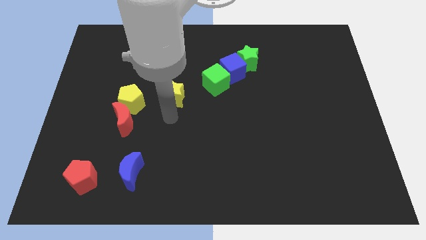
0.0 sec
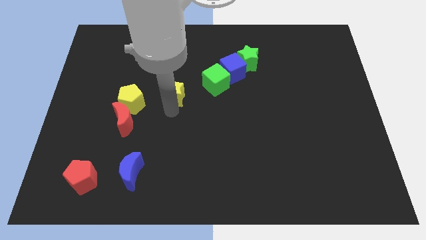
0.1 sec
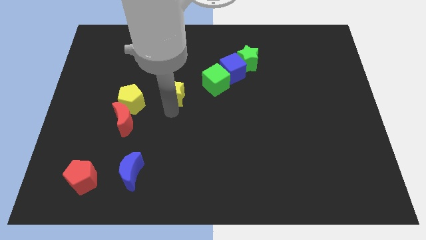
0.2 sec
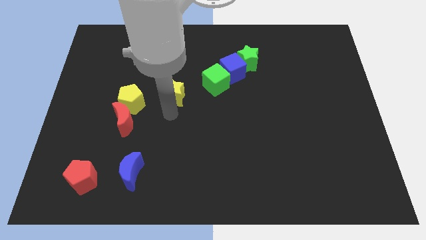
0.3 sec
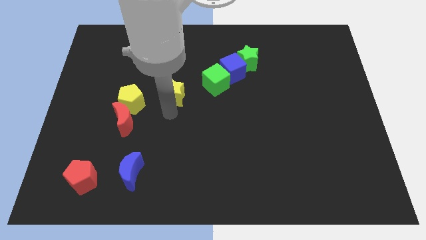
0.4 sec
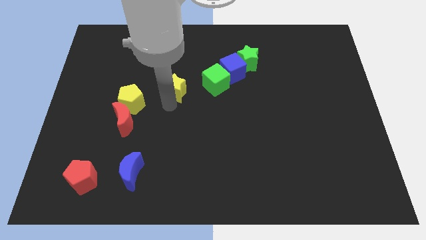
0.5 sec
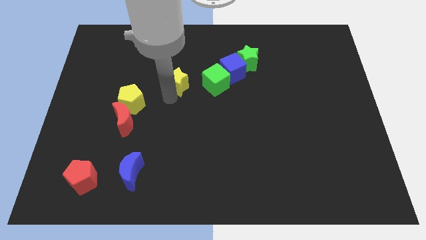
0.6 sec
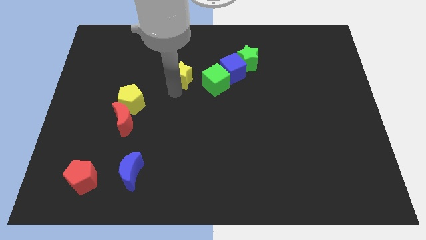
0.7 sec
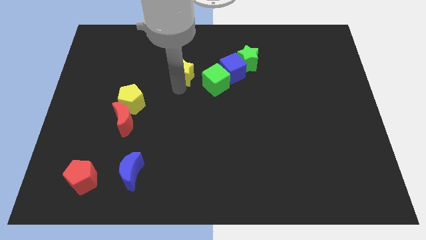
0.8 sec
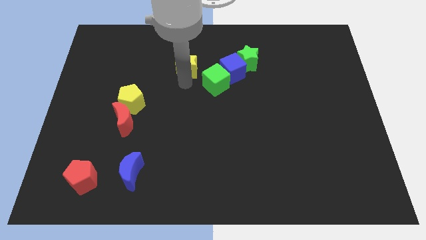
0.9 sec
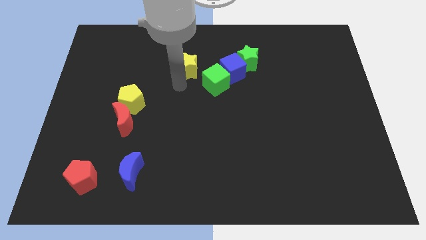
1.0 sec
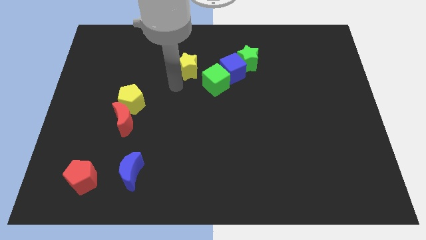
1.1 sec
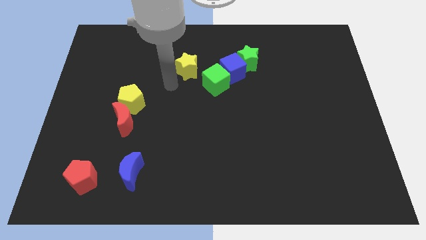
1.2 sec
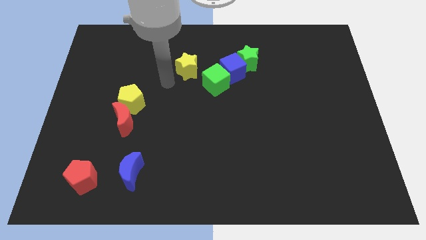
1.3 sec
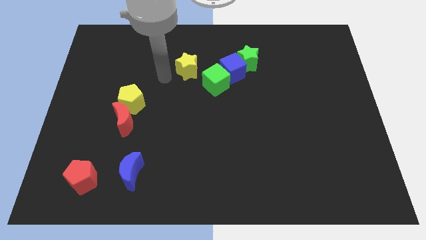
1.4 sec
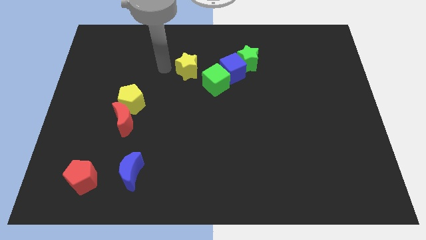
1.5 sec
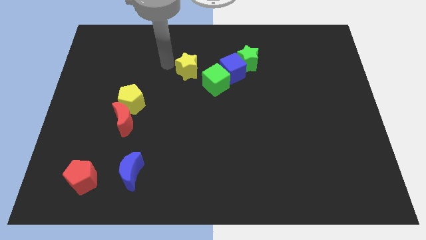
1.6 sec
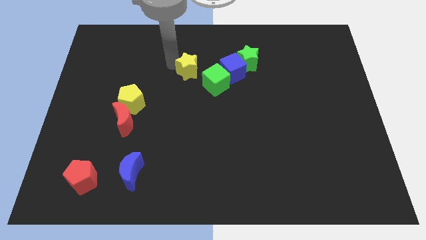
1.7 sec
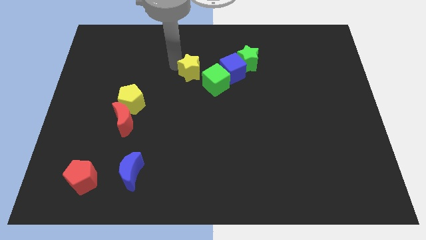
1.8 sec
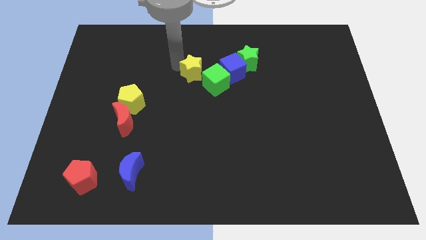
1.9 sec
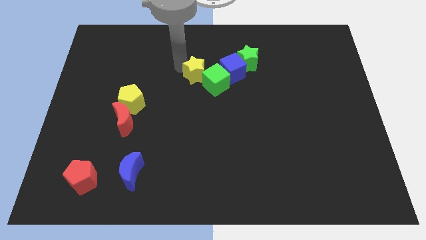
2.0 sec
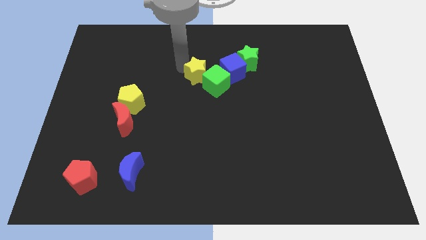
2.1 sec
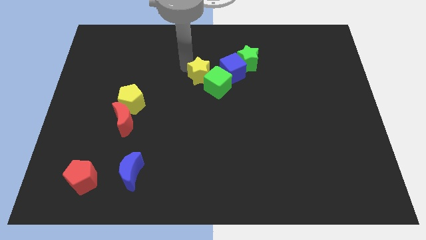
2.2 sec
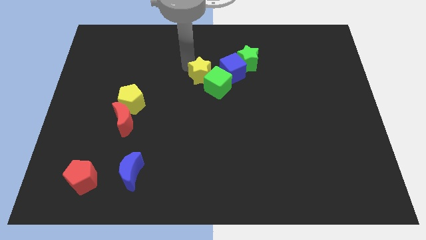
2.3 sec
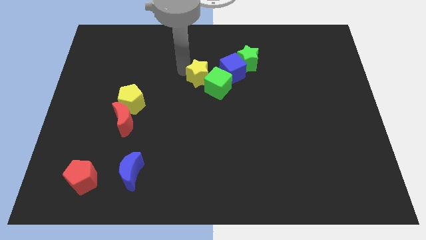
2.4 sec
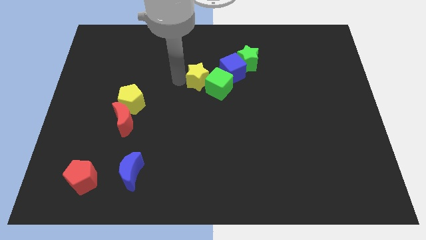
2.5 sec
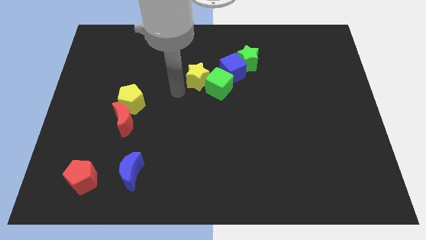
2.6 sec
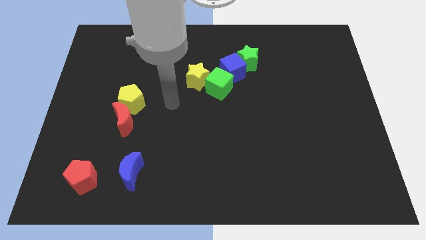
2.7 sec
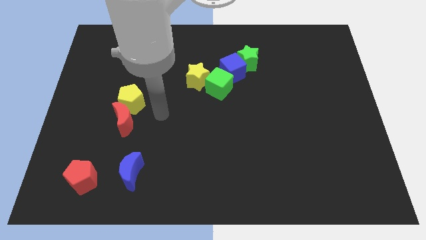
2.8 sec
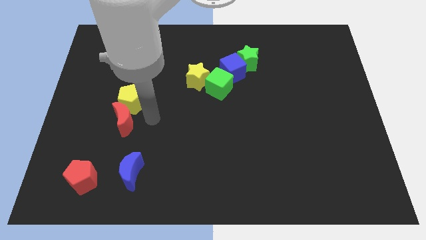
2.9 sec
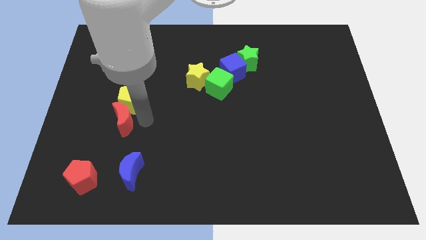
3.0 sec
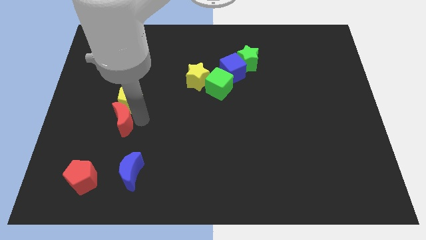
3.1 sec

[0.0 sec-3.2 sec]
move the yellow star diagonally to the left of the green cube

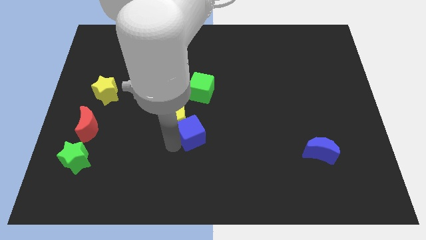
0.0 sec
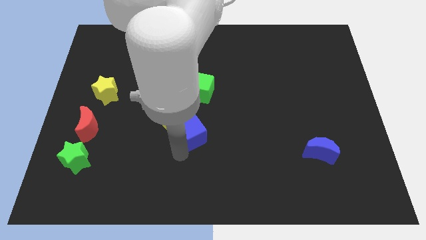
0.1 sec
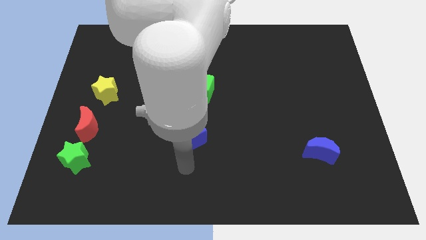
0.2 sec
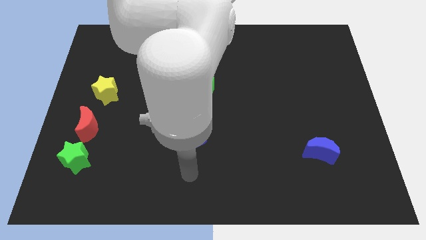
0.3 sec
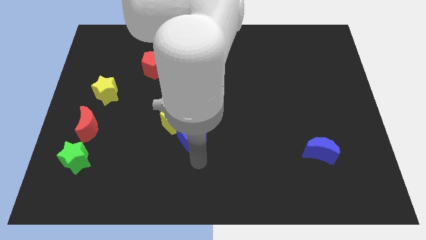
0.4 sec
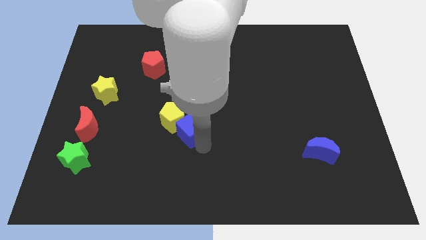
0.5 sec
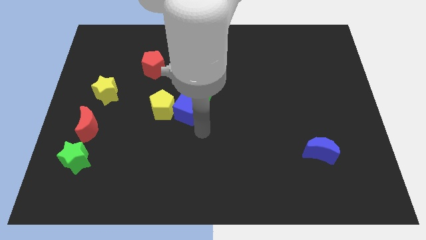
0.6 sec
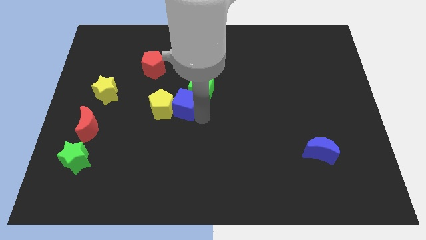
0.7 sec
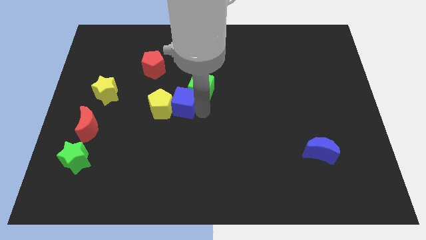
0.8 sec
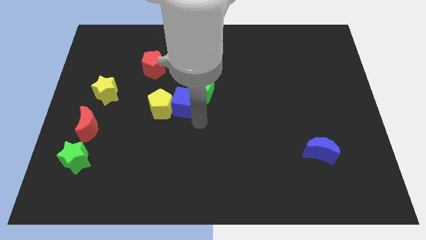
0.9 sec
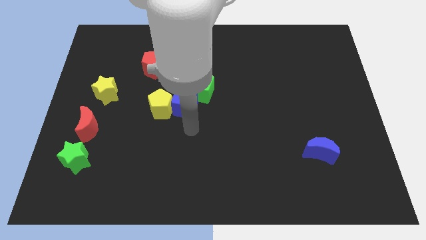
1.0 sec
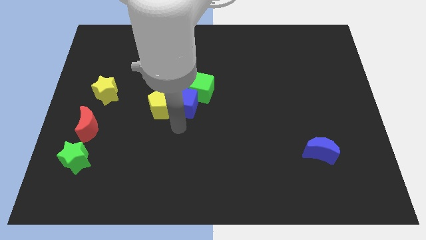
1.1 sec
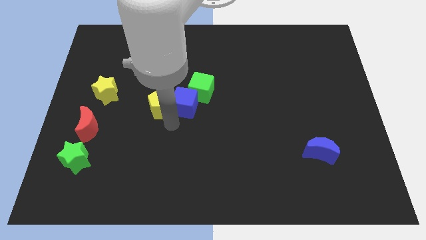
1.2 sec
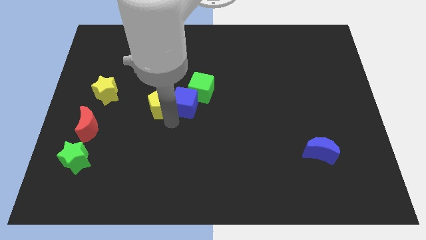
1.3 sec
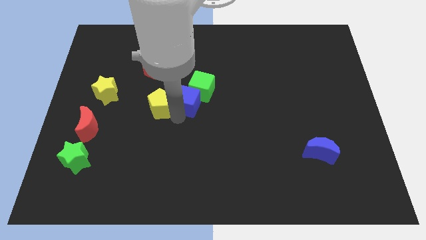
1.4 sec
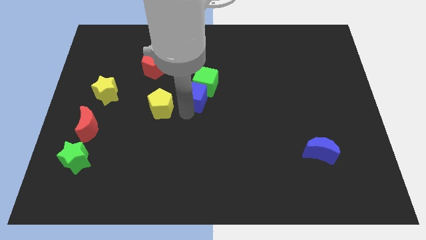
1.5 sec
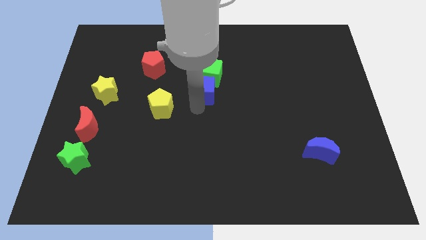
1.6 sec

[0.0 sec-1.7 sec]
put the blue cube into the green cube

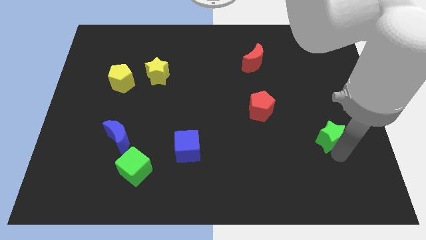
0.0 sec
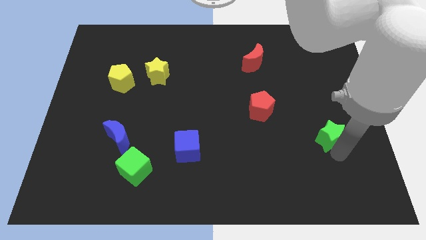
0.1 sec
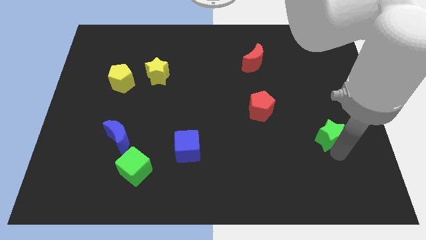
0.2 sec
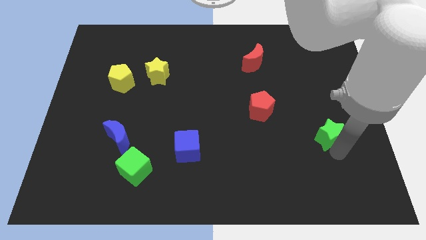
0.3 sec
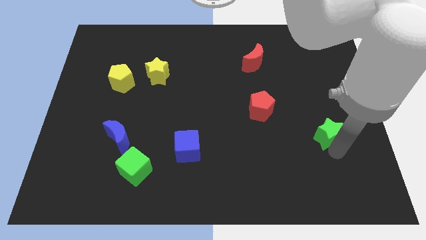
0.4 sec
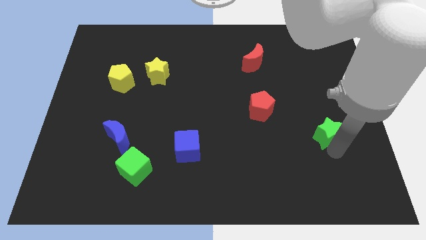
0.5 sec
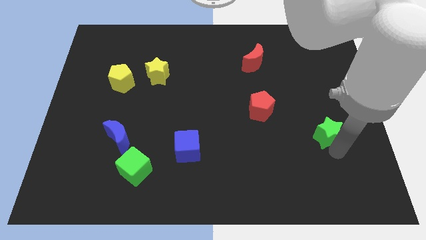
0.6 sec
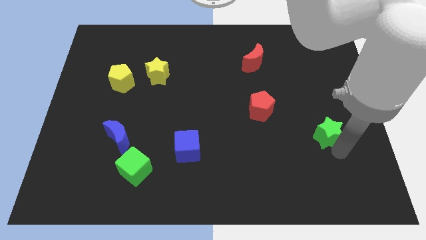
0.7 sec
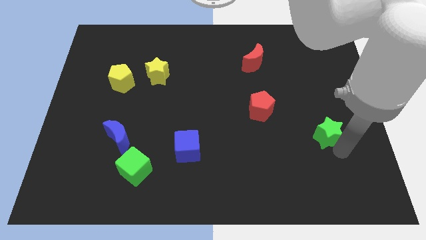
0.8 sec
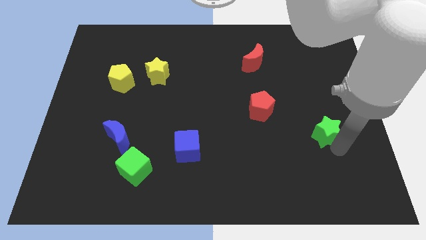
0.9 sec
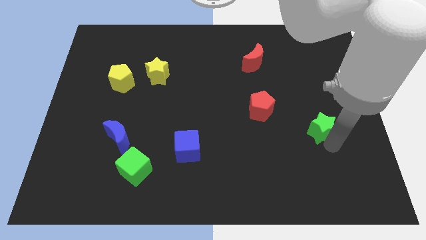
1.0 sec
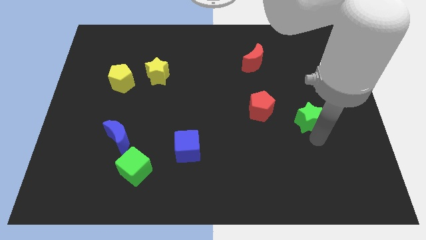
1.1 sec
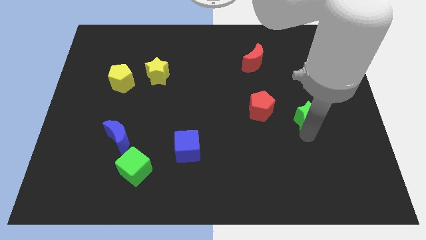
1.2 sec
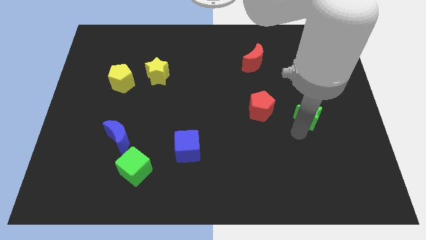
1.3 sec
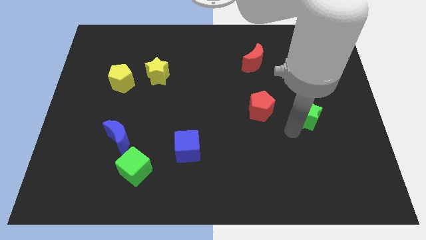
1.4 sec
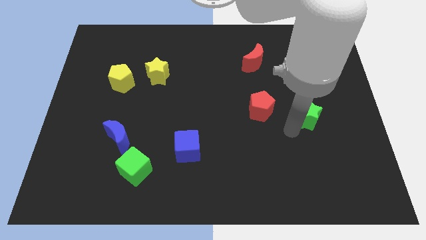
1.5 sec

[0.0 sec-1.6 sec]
slightly push the green star towards the top of the board

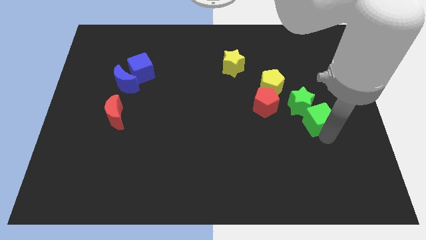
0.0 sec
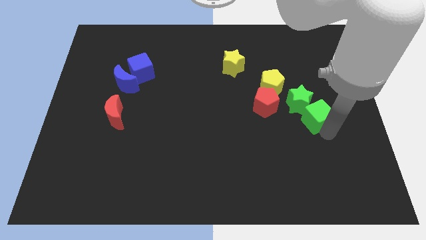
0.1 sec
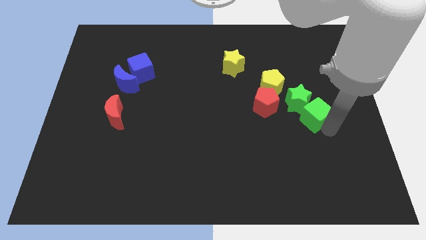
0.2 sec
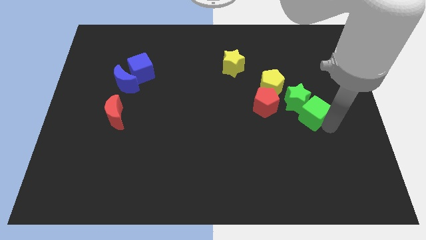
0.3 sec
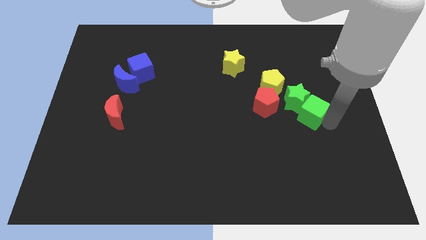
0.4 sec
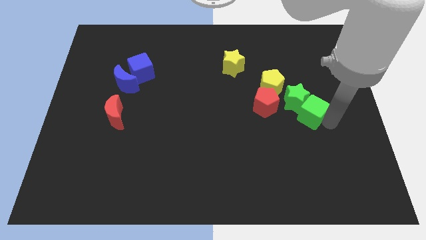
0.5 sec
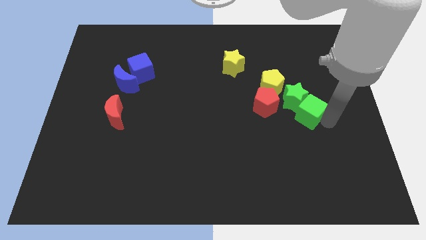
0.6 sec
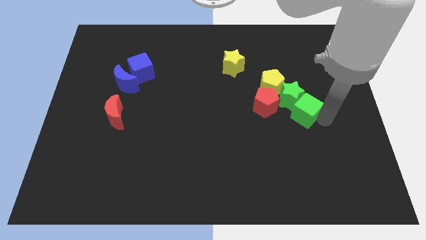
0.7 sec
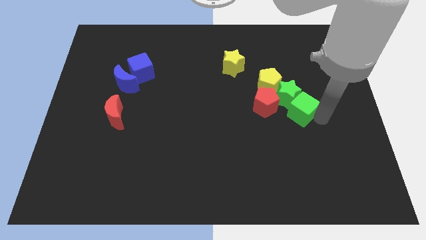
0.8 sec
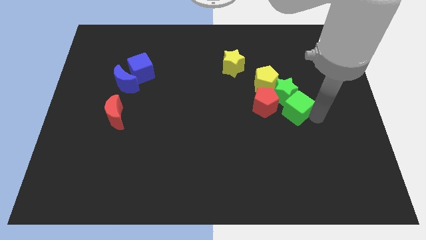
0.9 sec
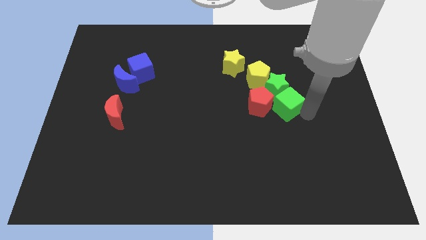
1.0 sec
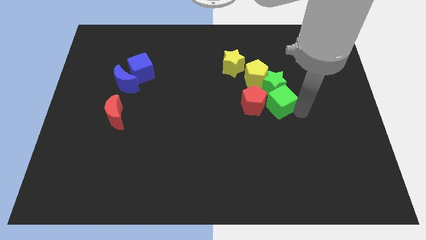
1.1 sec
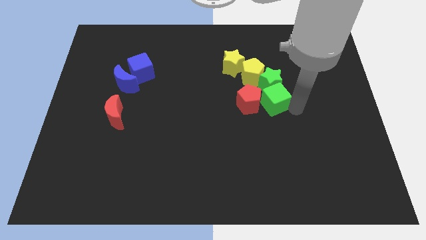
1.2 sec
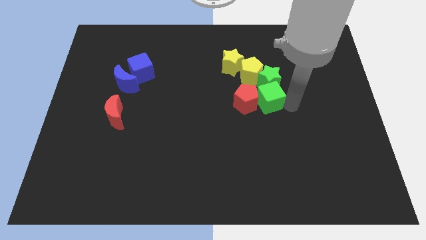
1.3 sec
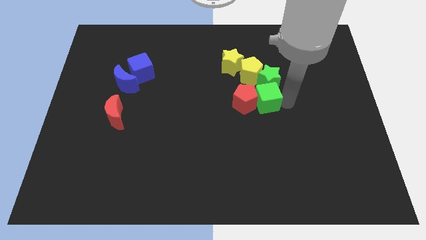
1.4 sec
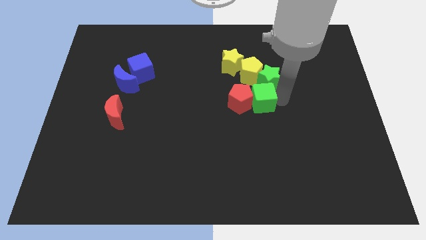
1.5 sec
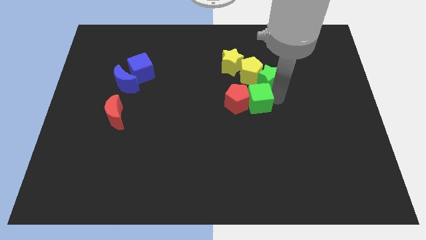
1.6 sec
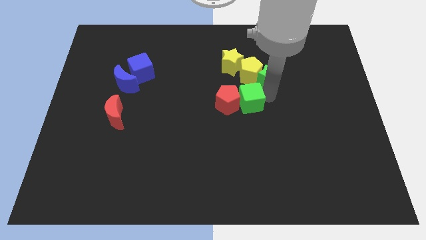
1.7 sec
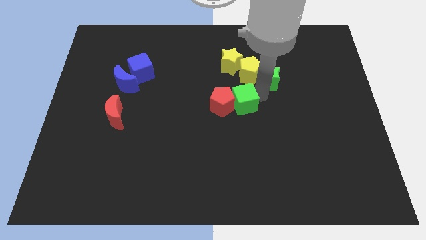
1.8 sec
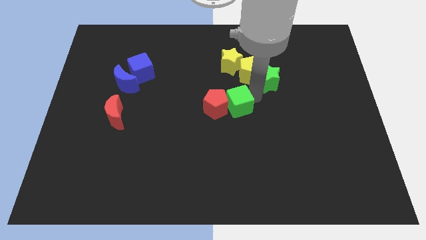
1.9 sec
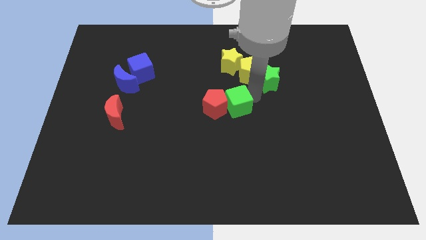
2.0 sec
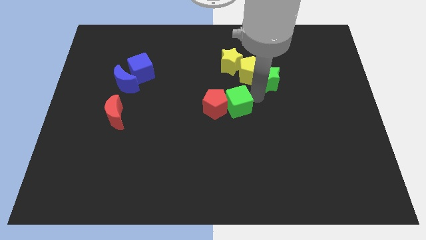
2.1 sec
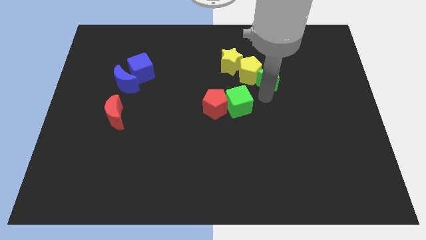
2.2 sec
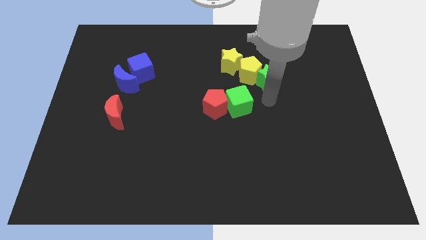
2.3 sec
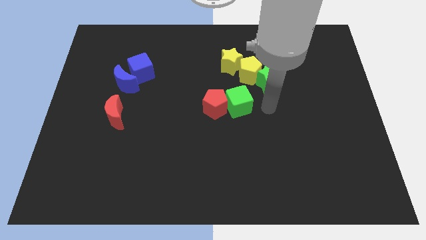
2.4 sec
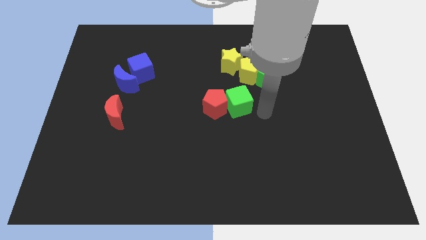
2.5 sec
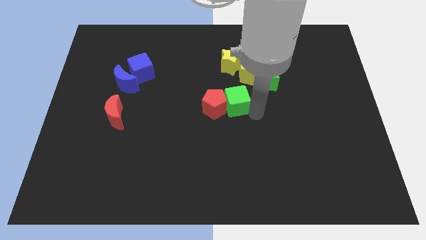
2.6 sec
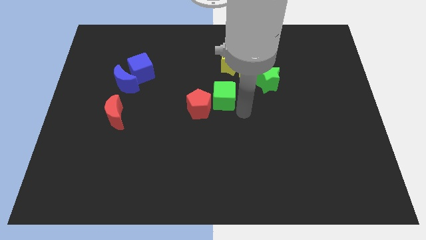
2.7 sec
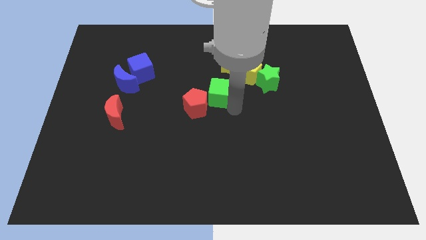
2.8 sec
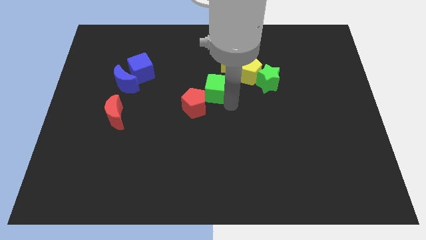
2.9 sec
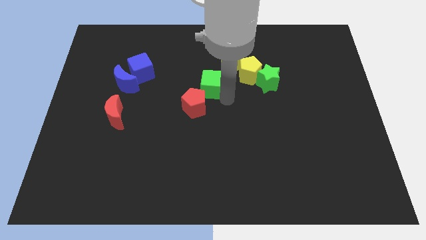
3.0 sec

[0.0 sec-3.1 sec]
move the green cube and red pentagon away from the other blocks
